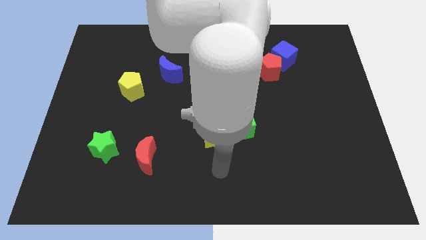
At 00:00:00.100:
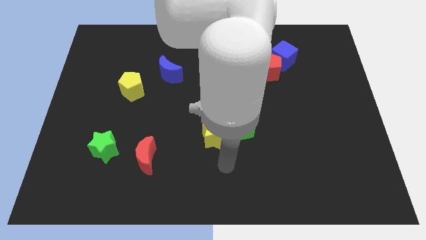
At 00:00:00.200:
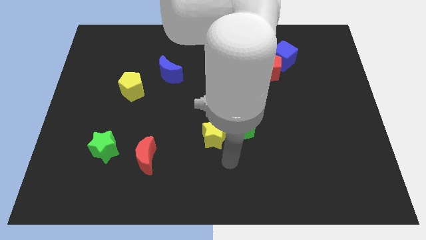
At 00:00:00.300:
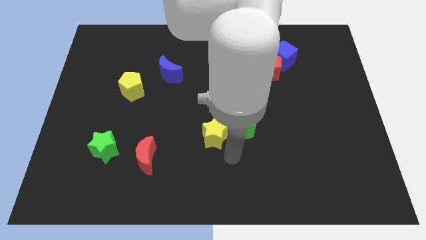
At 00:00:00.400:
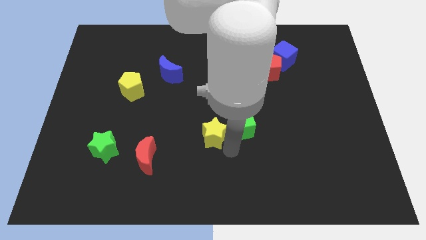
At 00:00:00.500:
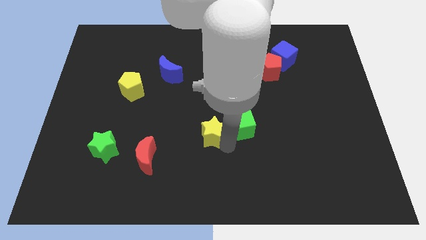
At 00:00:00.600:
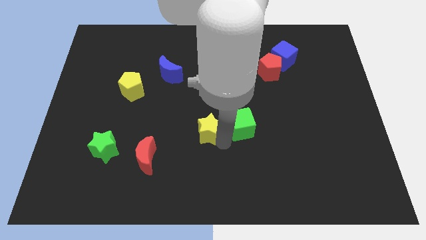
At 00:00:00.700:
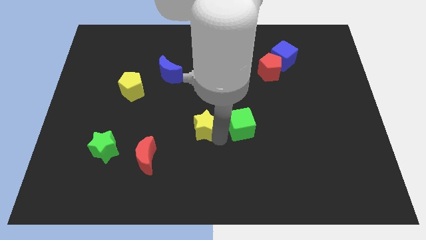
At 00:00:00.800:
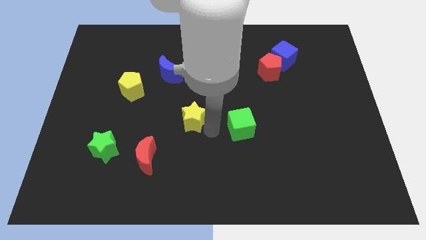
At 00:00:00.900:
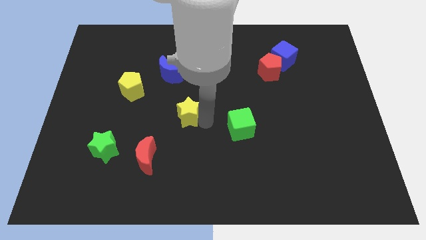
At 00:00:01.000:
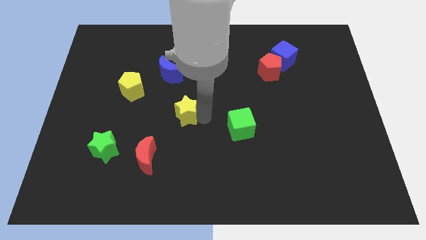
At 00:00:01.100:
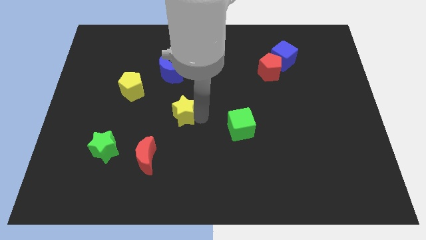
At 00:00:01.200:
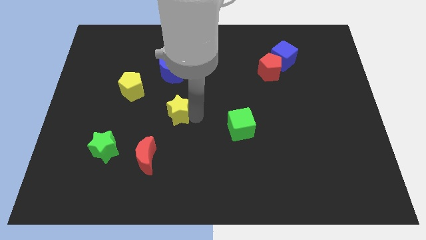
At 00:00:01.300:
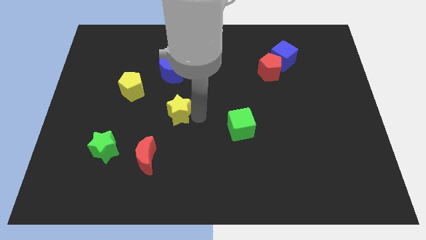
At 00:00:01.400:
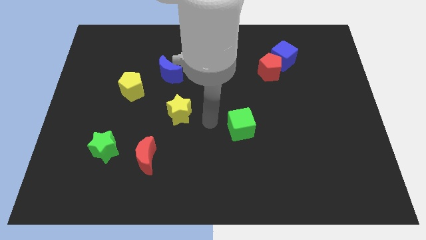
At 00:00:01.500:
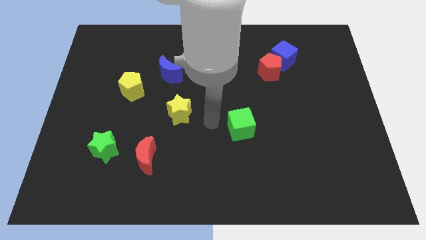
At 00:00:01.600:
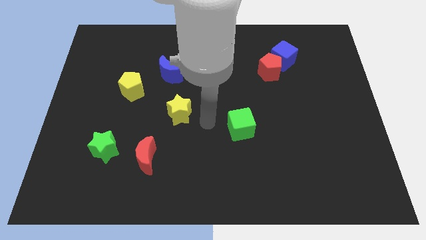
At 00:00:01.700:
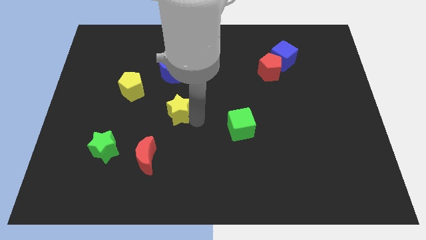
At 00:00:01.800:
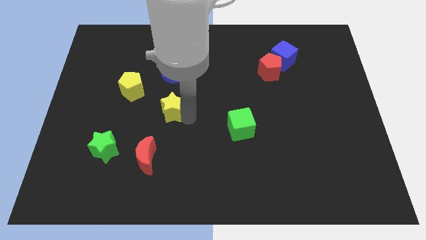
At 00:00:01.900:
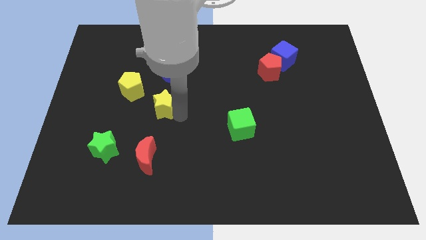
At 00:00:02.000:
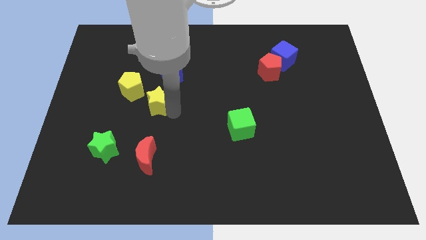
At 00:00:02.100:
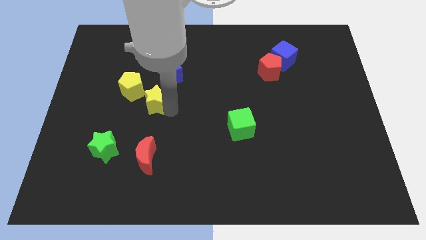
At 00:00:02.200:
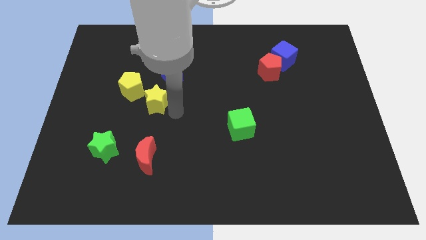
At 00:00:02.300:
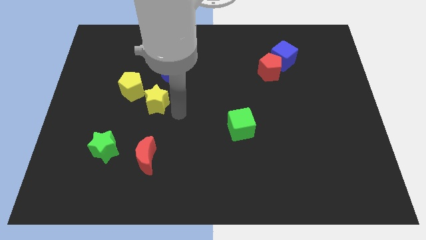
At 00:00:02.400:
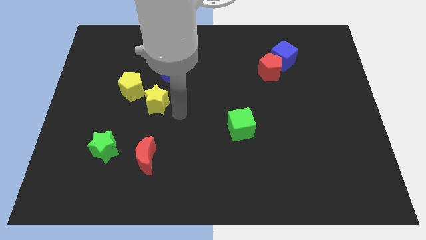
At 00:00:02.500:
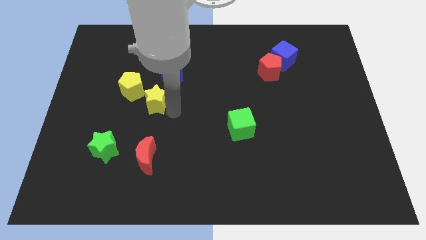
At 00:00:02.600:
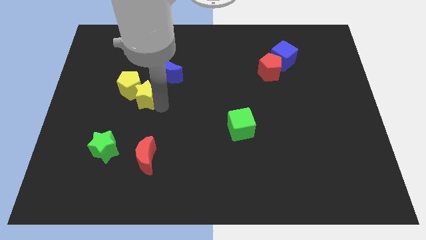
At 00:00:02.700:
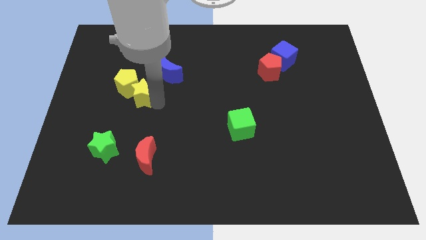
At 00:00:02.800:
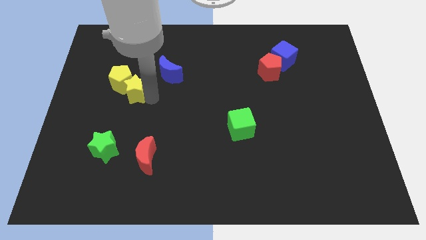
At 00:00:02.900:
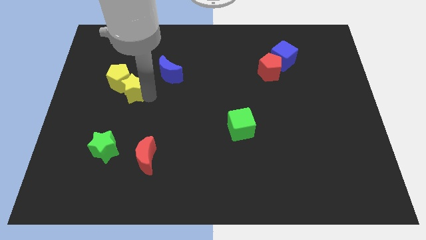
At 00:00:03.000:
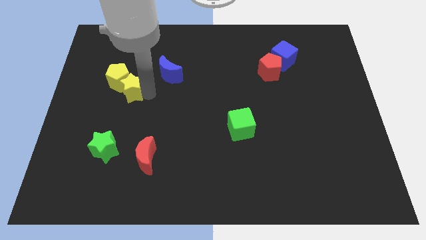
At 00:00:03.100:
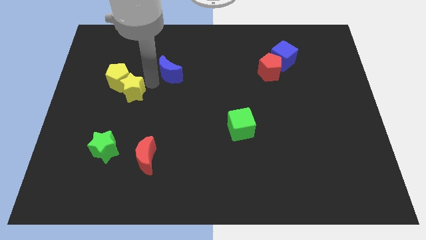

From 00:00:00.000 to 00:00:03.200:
push the yellow star into the yellow pentagon

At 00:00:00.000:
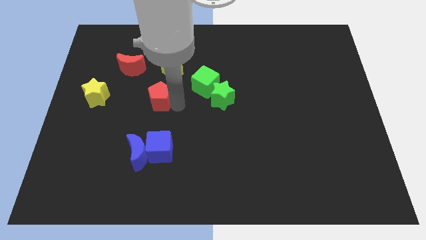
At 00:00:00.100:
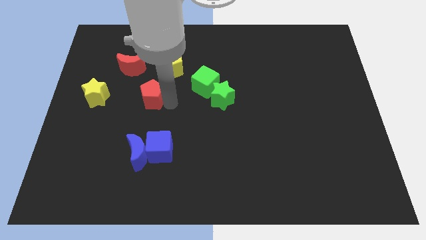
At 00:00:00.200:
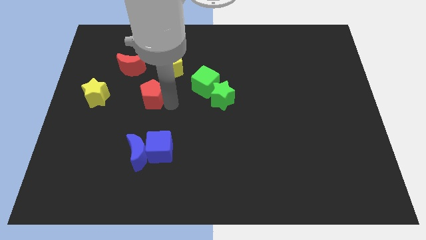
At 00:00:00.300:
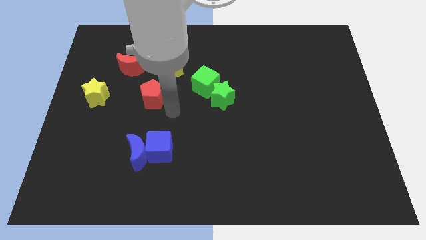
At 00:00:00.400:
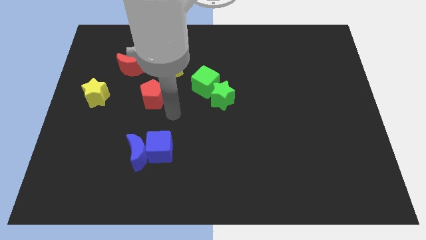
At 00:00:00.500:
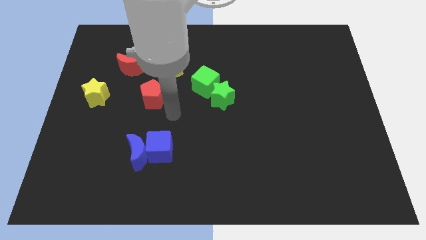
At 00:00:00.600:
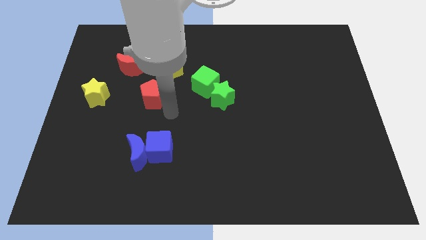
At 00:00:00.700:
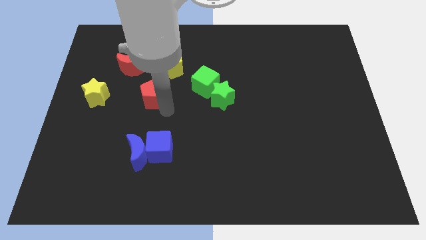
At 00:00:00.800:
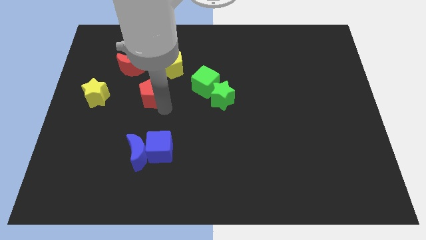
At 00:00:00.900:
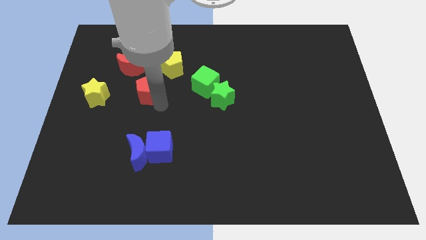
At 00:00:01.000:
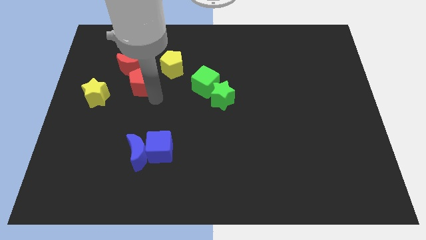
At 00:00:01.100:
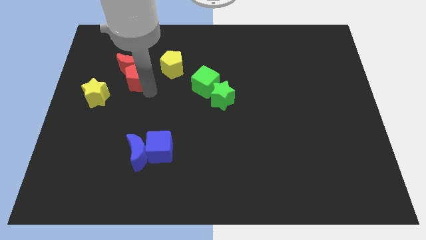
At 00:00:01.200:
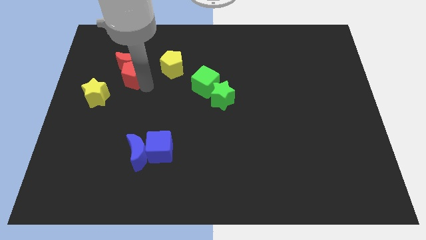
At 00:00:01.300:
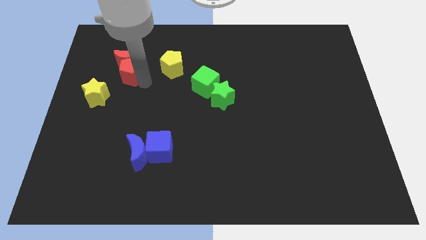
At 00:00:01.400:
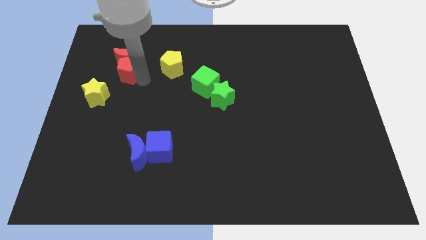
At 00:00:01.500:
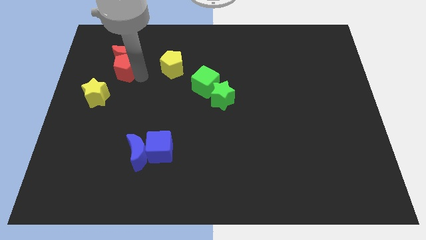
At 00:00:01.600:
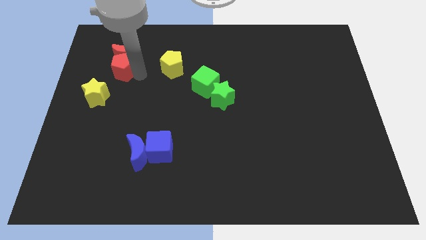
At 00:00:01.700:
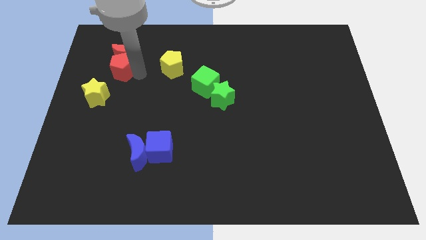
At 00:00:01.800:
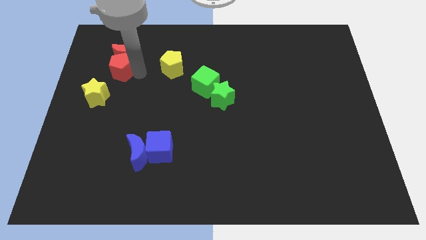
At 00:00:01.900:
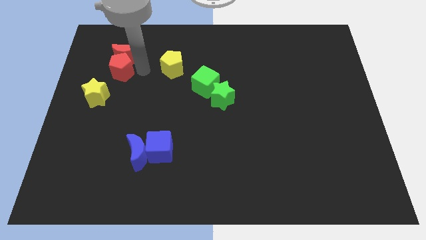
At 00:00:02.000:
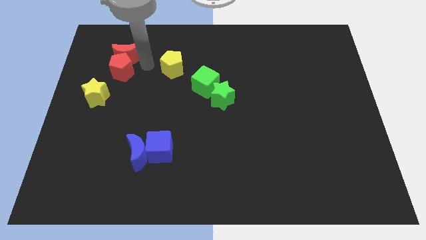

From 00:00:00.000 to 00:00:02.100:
push red pentagon into red moon

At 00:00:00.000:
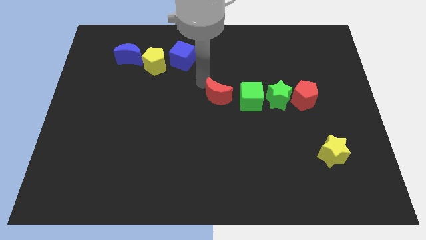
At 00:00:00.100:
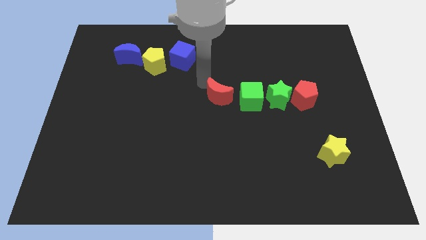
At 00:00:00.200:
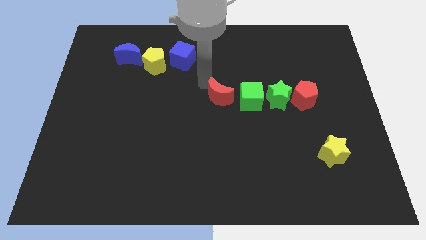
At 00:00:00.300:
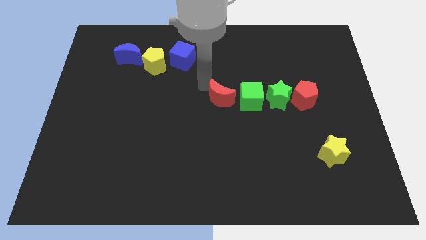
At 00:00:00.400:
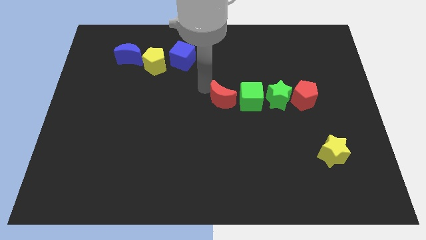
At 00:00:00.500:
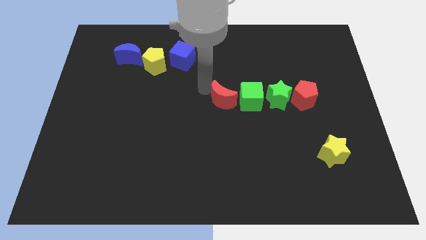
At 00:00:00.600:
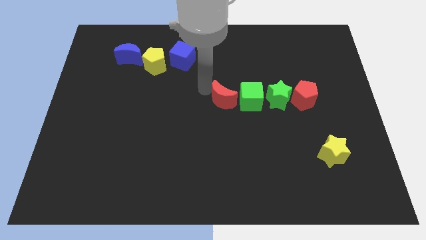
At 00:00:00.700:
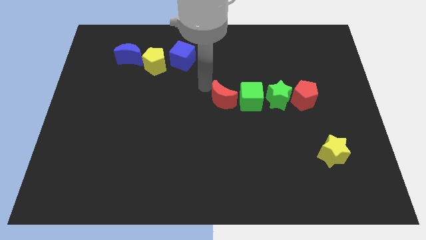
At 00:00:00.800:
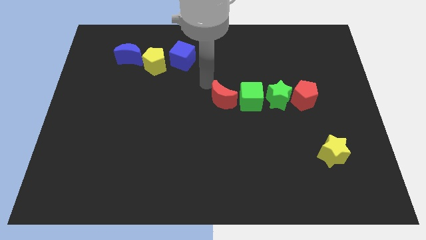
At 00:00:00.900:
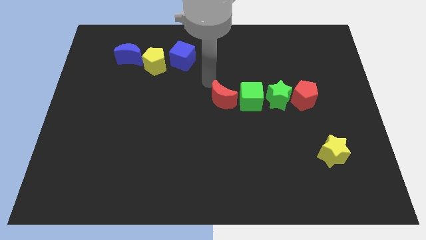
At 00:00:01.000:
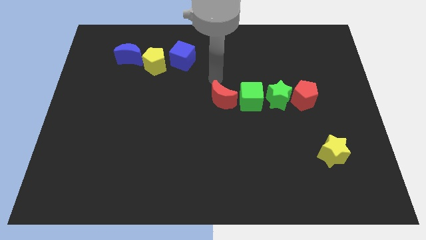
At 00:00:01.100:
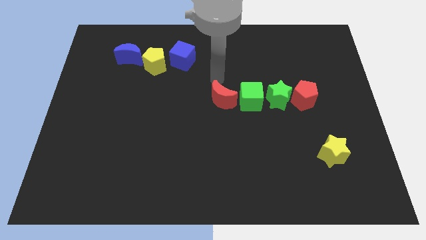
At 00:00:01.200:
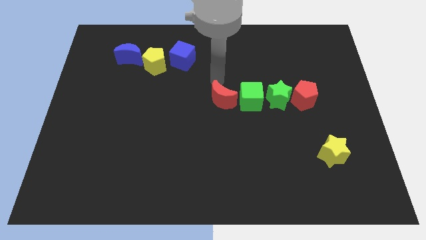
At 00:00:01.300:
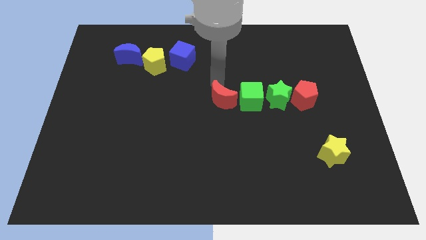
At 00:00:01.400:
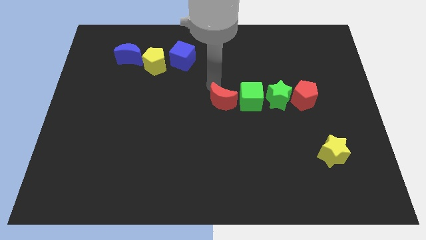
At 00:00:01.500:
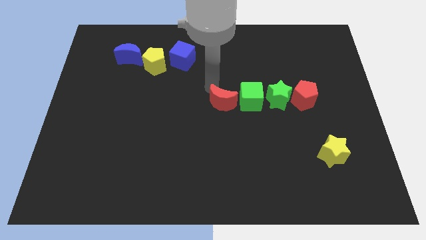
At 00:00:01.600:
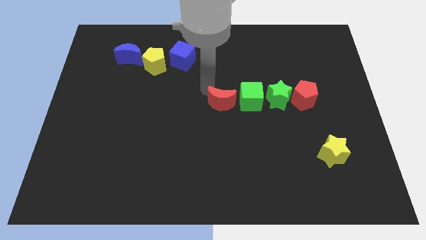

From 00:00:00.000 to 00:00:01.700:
move the red moon left side of the green cube

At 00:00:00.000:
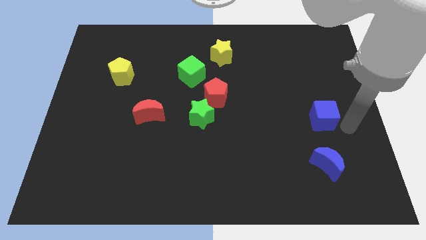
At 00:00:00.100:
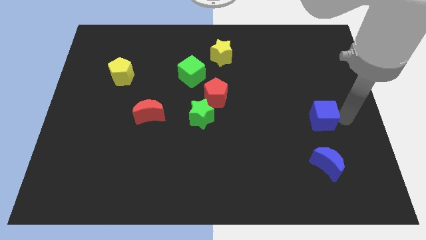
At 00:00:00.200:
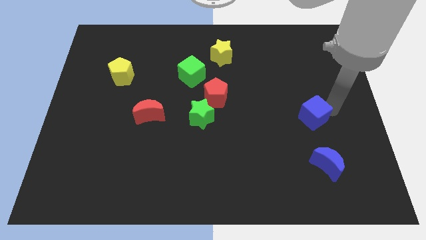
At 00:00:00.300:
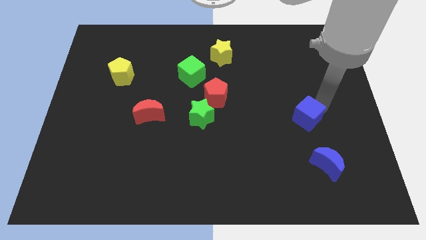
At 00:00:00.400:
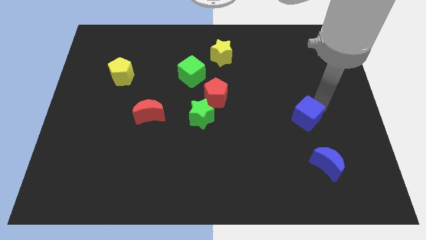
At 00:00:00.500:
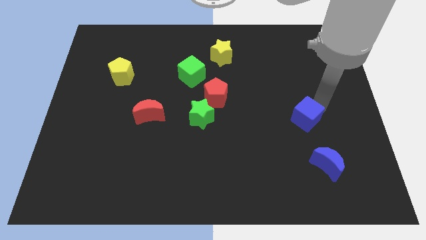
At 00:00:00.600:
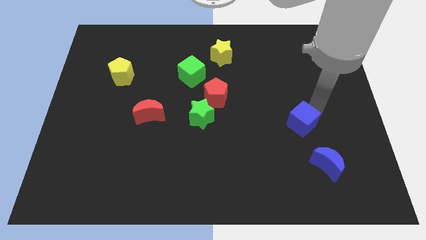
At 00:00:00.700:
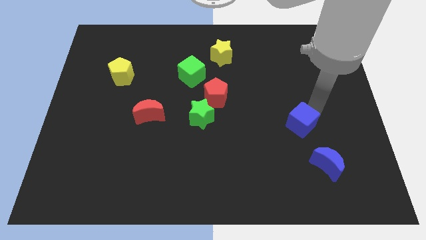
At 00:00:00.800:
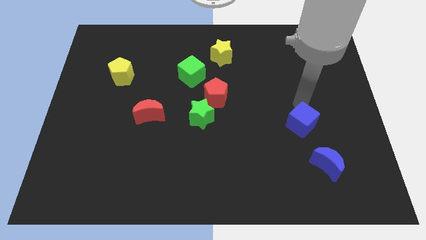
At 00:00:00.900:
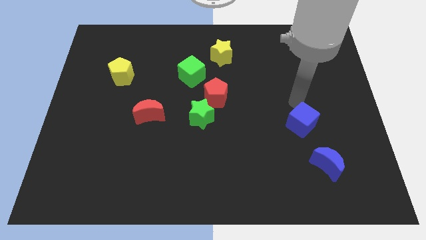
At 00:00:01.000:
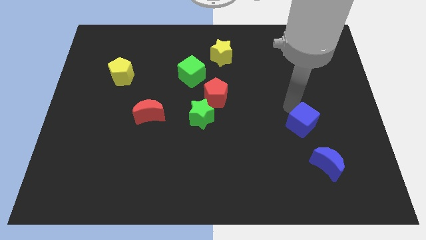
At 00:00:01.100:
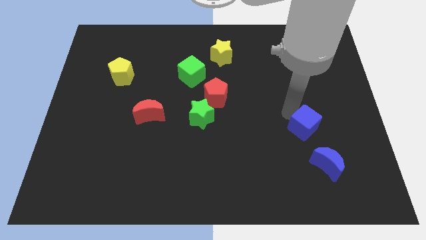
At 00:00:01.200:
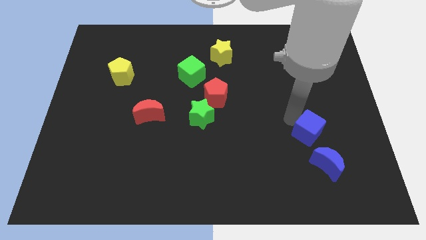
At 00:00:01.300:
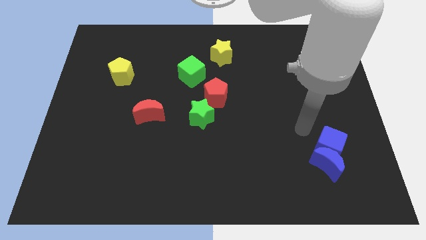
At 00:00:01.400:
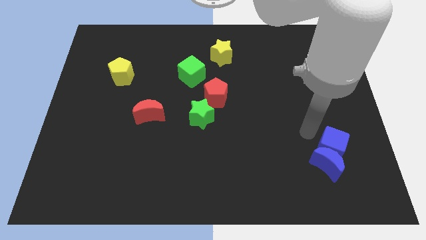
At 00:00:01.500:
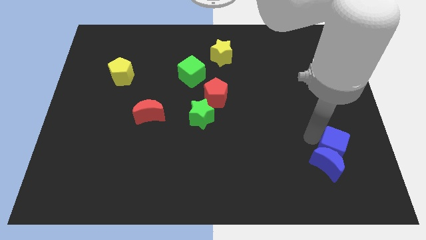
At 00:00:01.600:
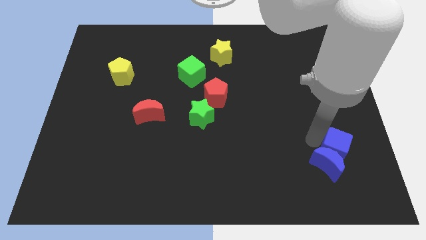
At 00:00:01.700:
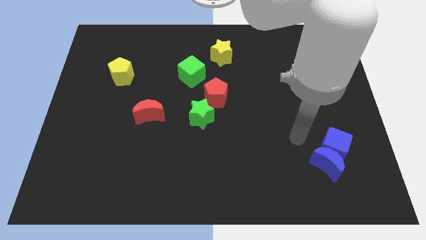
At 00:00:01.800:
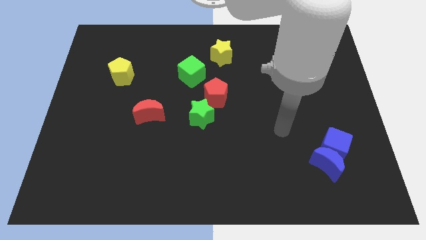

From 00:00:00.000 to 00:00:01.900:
slide the blue cube towards the bottom right side of the board
